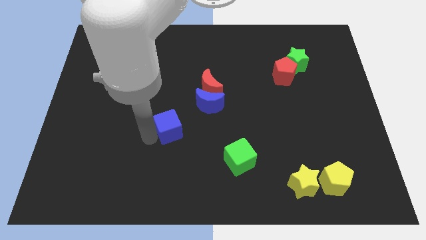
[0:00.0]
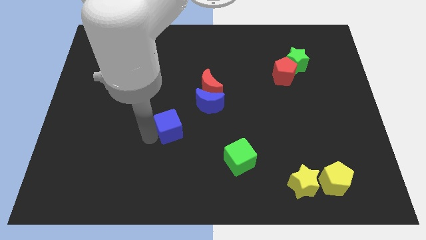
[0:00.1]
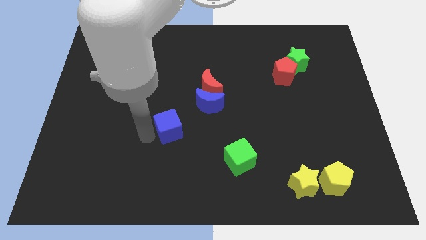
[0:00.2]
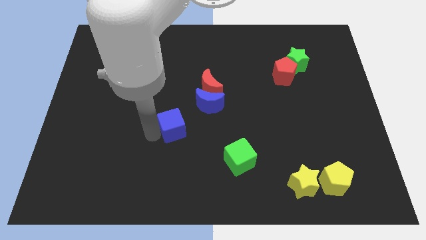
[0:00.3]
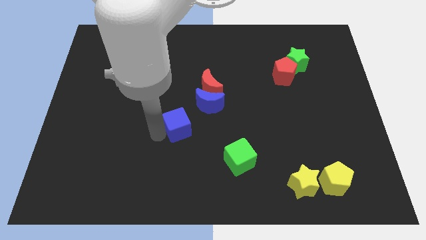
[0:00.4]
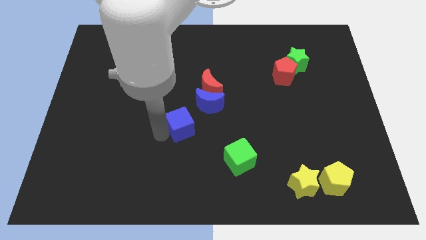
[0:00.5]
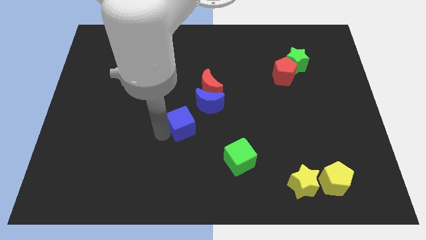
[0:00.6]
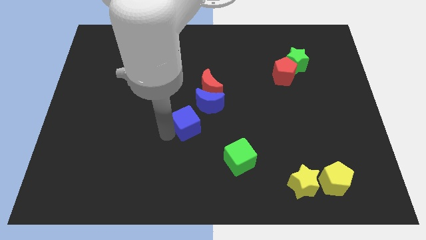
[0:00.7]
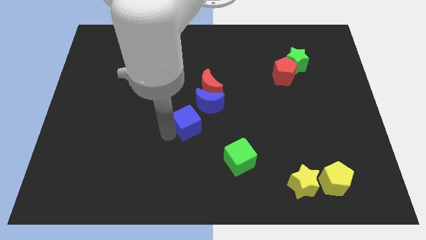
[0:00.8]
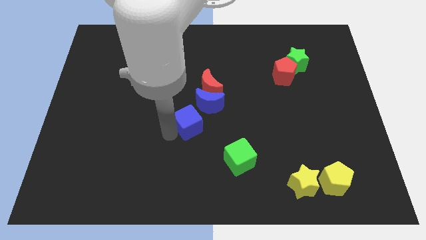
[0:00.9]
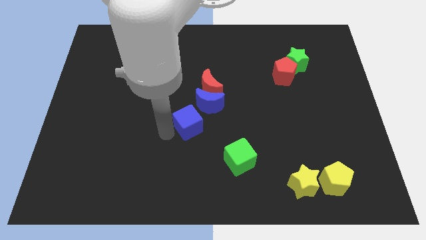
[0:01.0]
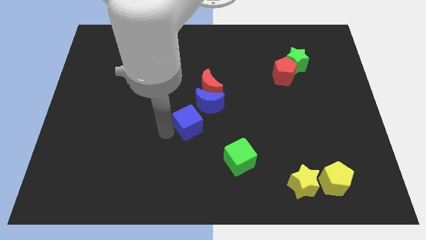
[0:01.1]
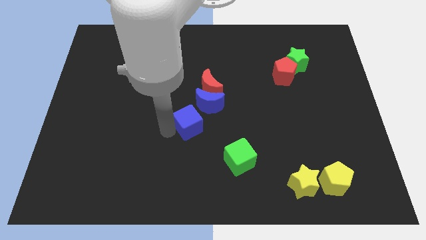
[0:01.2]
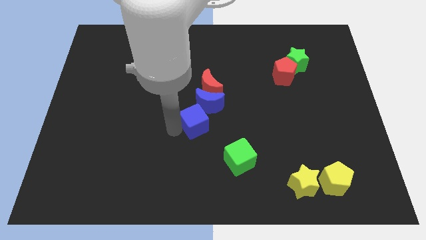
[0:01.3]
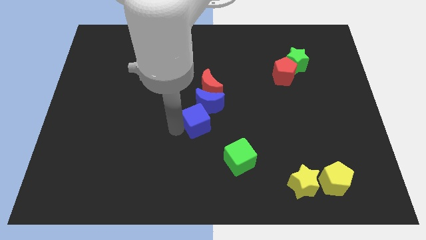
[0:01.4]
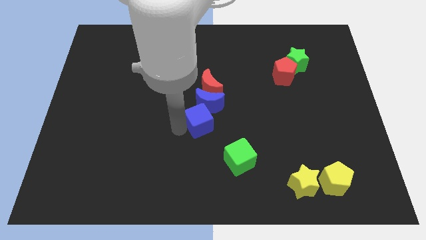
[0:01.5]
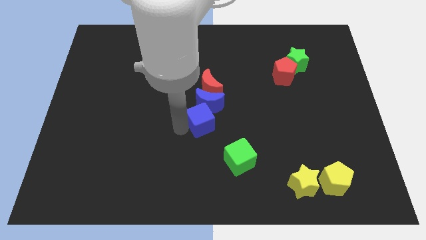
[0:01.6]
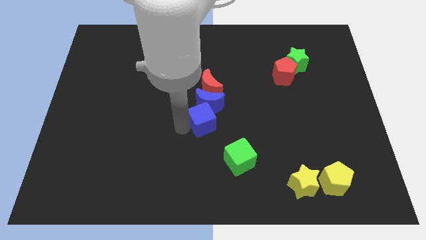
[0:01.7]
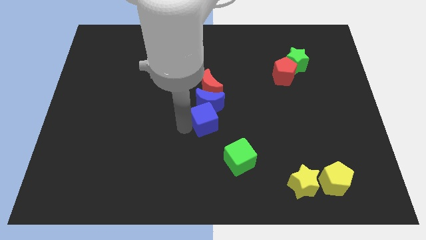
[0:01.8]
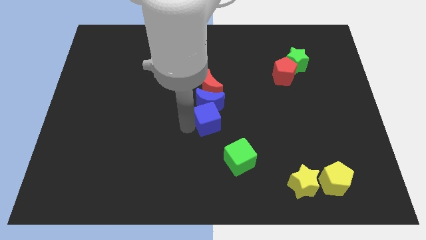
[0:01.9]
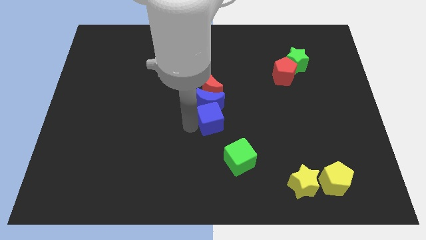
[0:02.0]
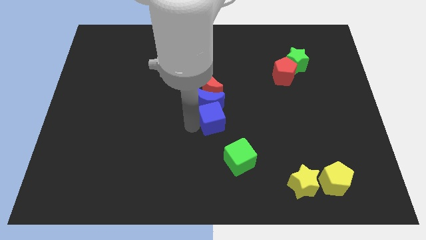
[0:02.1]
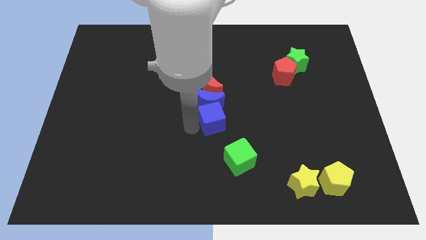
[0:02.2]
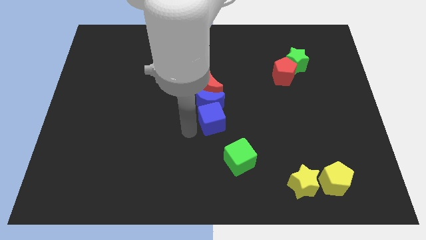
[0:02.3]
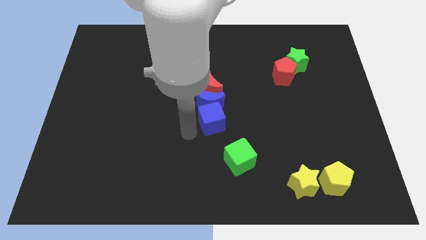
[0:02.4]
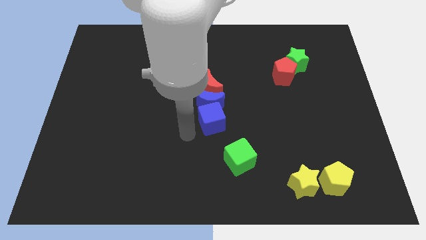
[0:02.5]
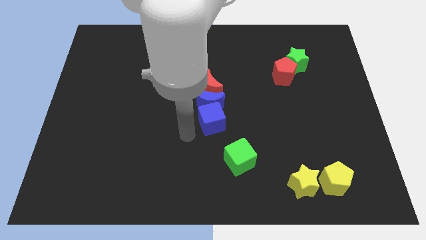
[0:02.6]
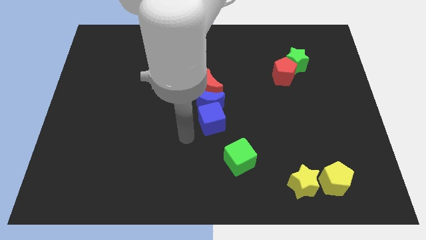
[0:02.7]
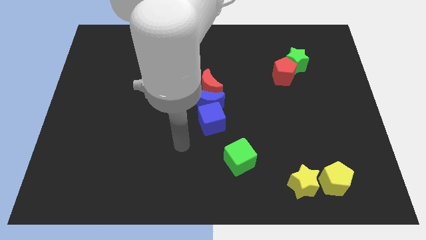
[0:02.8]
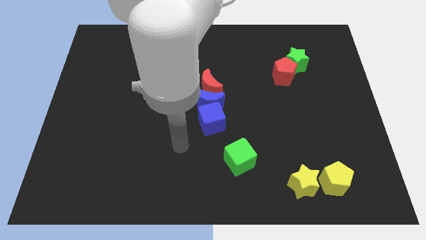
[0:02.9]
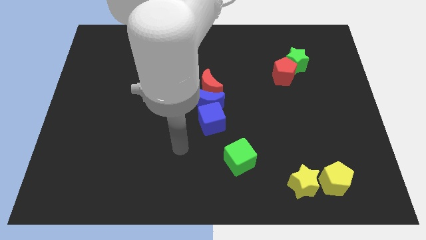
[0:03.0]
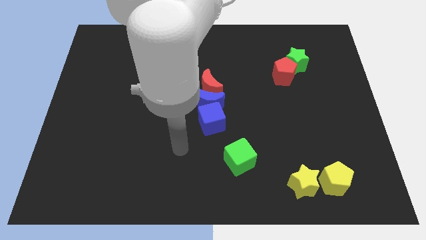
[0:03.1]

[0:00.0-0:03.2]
move the blue cube close to the blue crescent

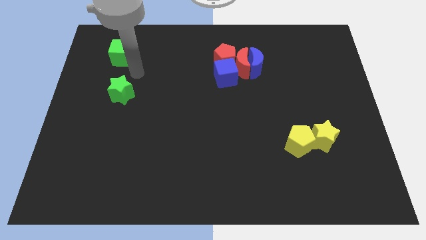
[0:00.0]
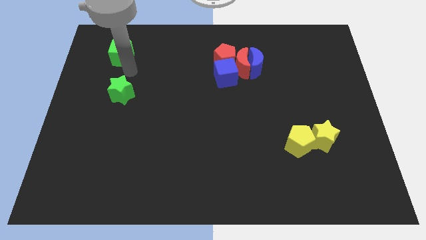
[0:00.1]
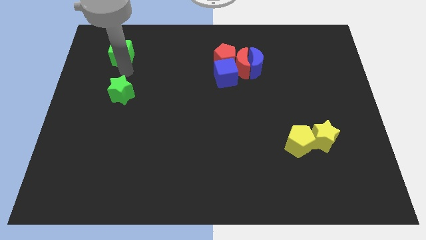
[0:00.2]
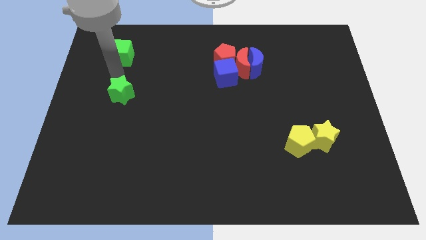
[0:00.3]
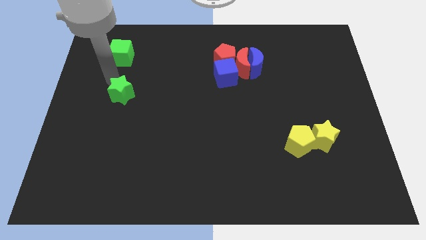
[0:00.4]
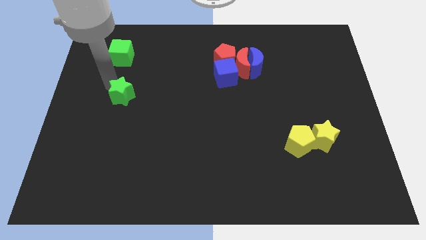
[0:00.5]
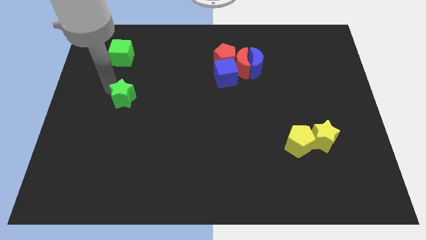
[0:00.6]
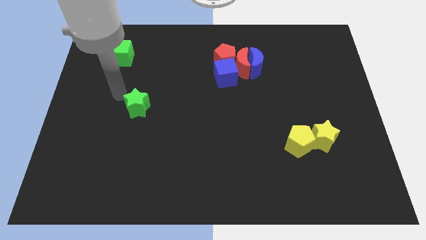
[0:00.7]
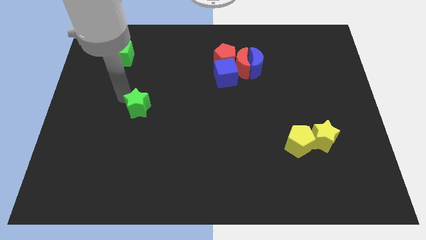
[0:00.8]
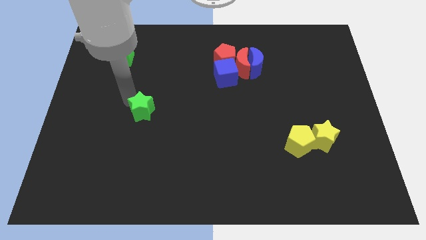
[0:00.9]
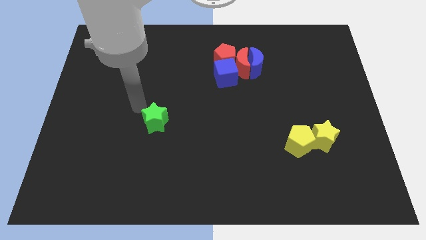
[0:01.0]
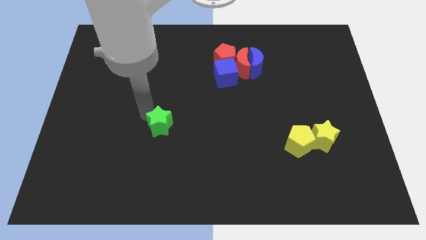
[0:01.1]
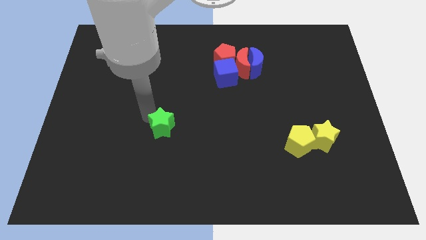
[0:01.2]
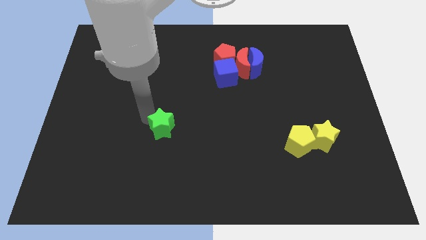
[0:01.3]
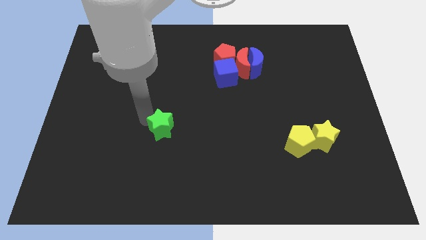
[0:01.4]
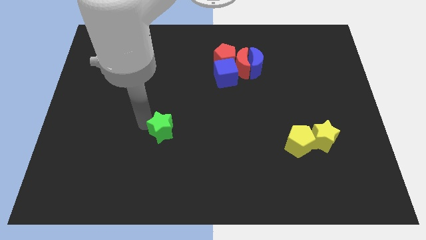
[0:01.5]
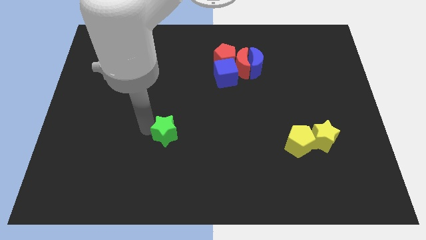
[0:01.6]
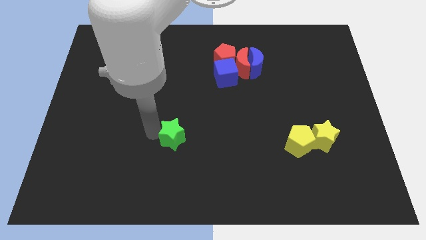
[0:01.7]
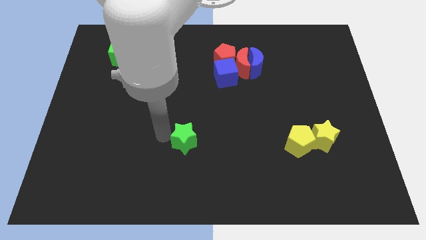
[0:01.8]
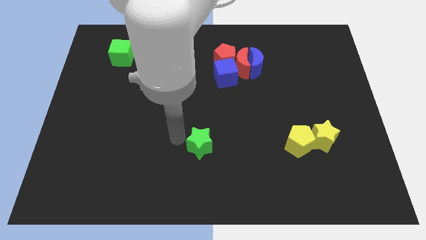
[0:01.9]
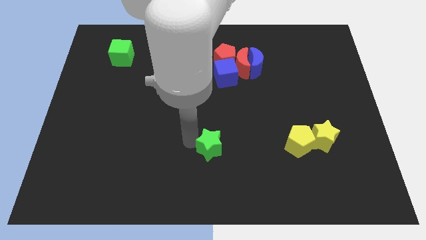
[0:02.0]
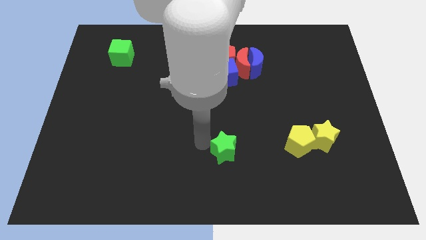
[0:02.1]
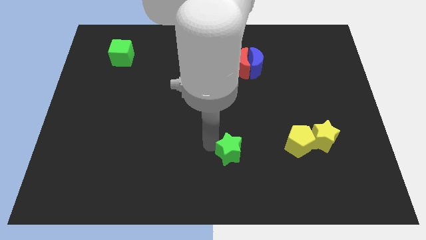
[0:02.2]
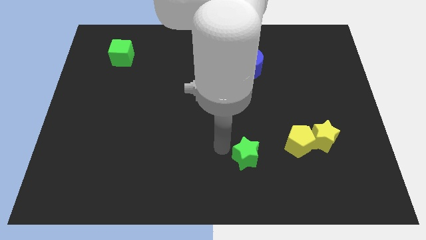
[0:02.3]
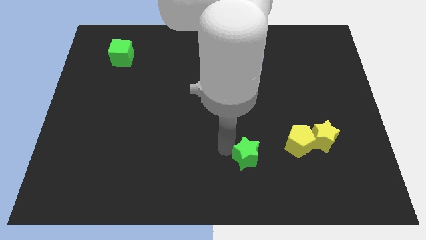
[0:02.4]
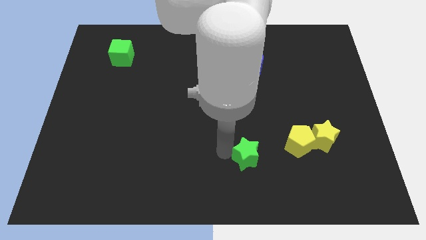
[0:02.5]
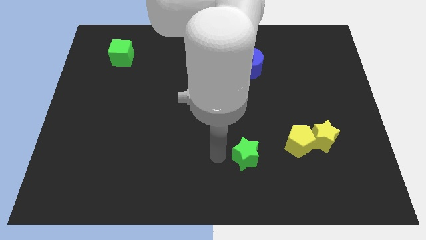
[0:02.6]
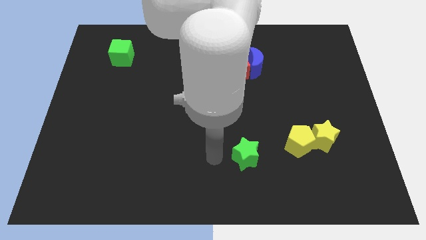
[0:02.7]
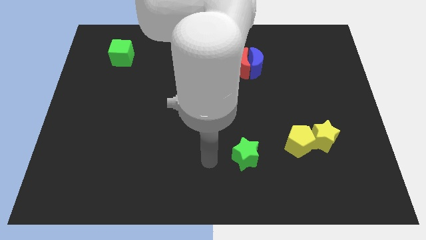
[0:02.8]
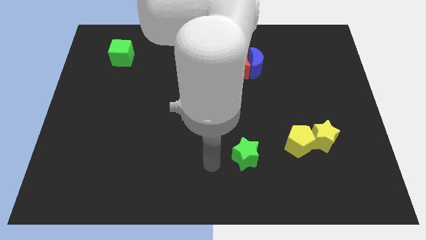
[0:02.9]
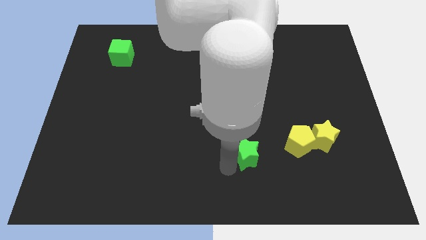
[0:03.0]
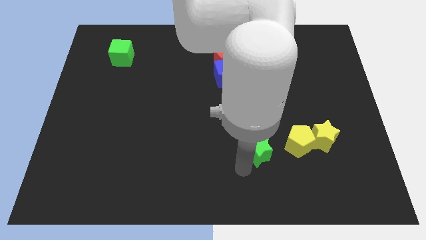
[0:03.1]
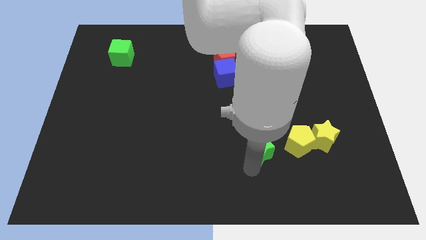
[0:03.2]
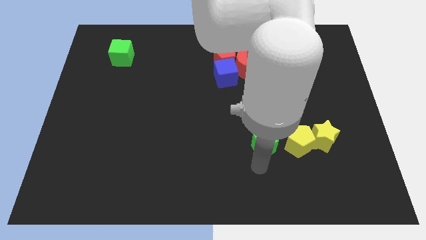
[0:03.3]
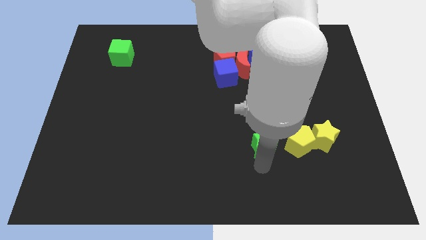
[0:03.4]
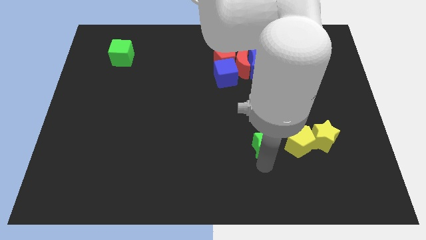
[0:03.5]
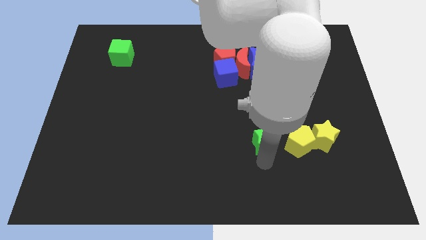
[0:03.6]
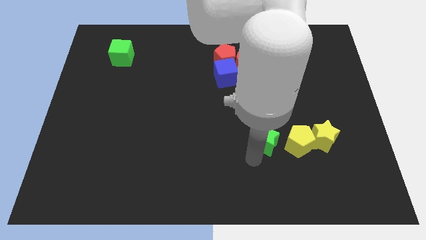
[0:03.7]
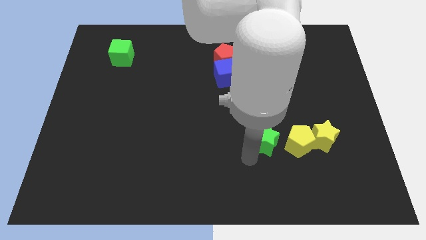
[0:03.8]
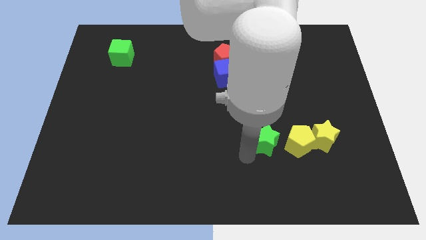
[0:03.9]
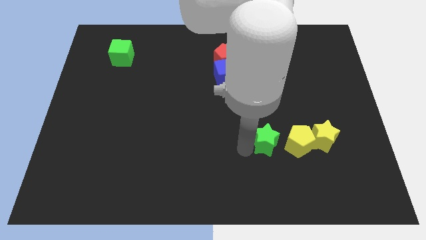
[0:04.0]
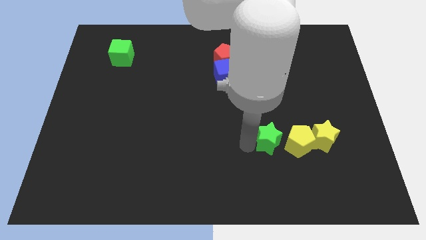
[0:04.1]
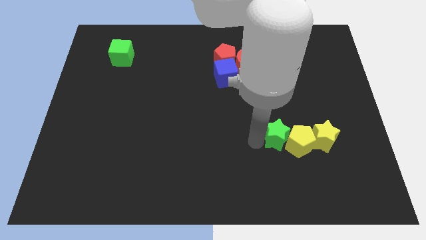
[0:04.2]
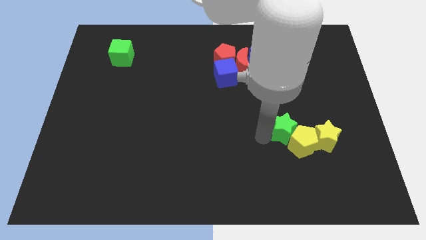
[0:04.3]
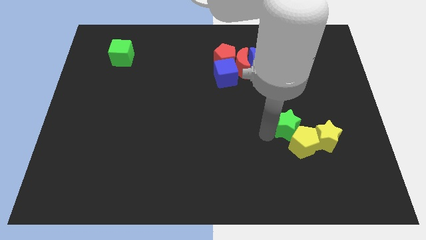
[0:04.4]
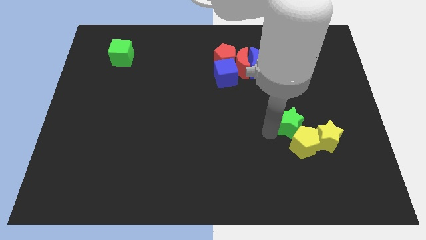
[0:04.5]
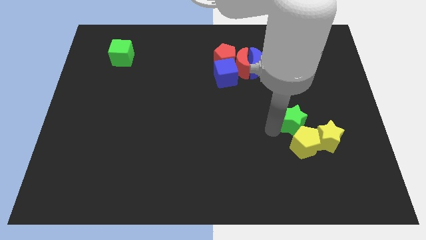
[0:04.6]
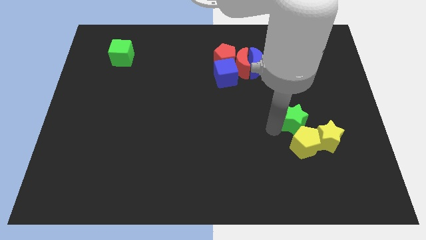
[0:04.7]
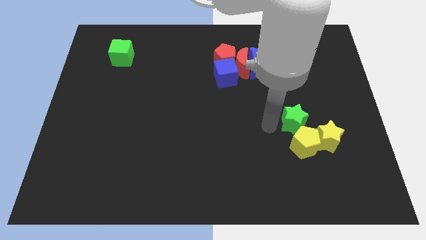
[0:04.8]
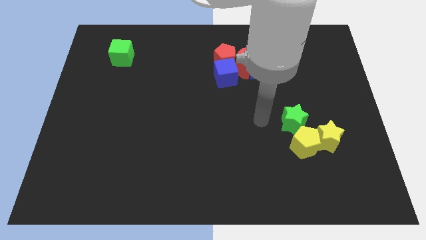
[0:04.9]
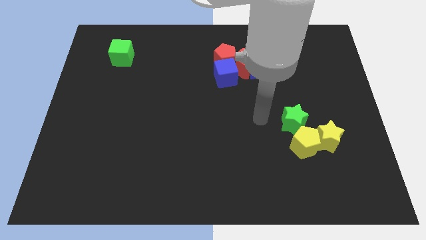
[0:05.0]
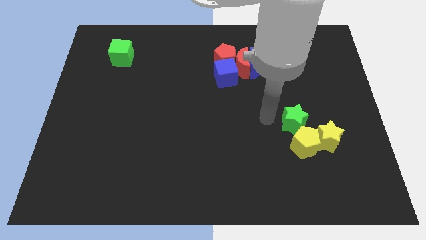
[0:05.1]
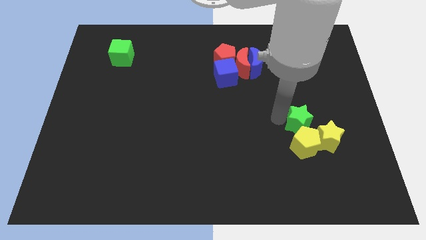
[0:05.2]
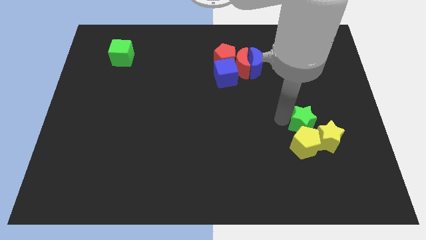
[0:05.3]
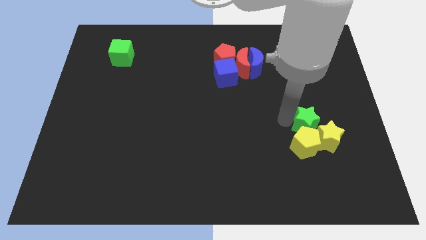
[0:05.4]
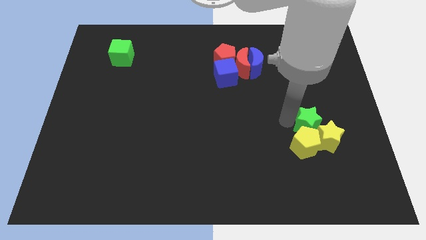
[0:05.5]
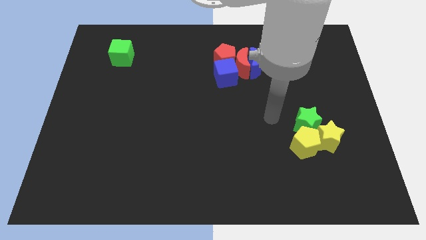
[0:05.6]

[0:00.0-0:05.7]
push green star towards the top of the yellow blocks

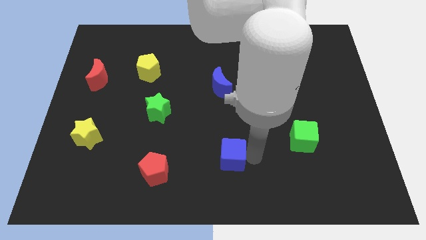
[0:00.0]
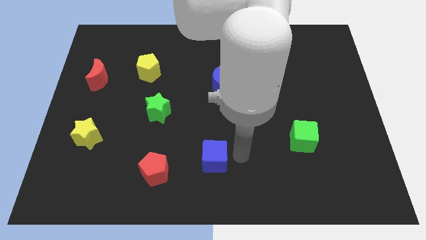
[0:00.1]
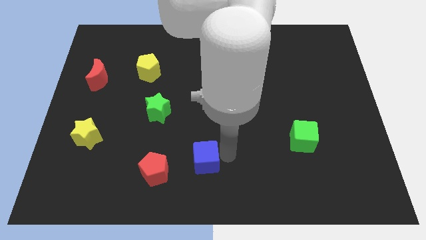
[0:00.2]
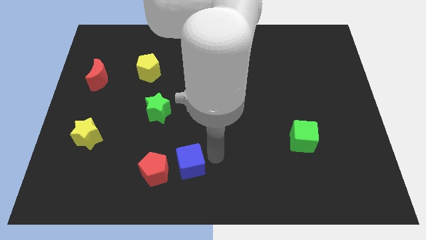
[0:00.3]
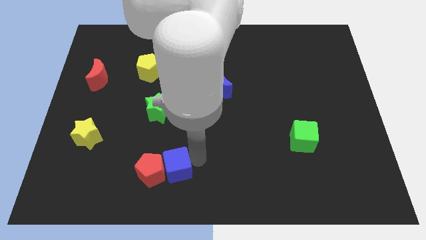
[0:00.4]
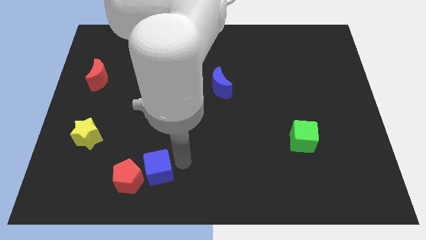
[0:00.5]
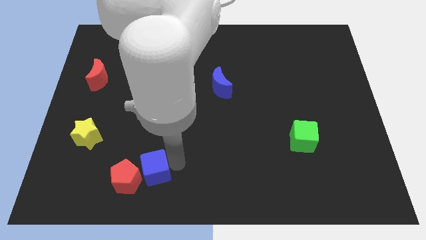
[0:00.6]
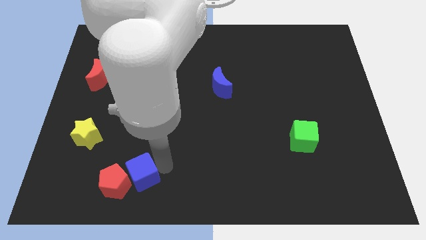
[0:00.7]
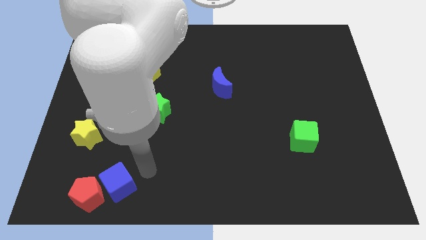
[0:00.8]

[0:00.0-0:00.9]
push the blue cube into the red pentagon
